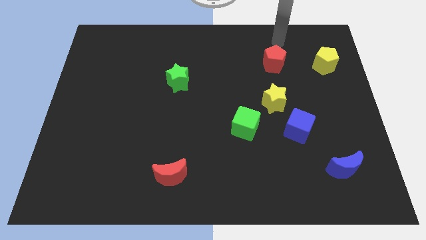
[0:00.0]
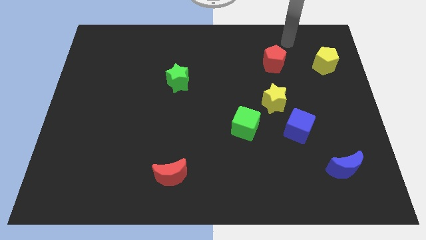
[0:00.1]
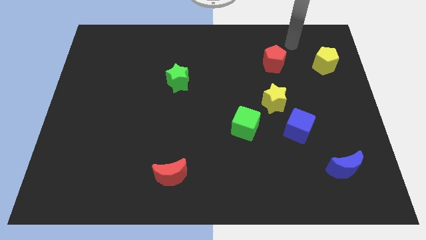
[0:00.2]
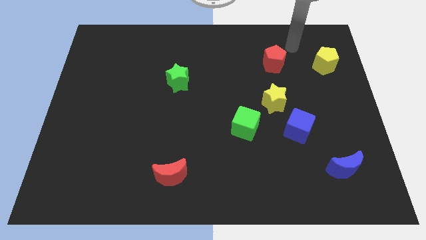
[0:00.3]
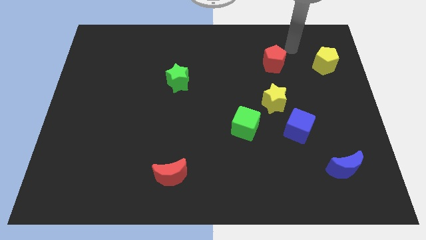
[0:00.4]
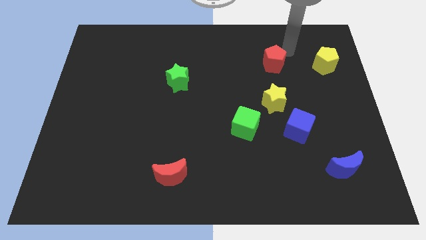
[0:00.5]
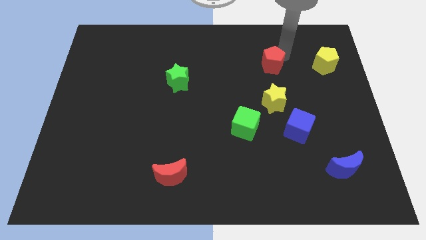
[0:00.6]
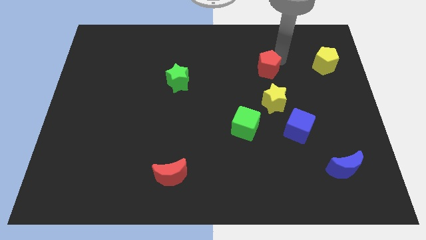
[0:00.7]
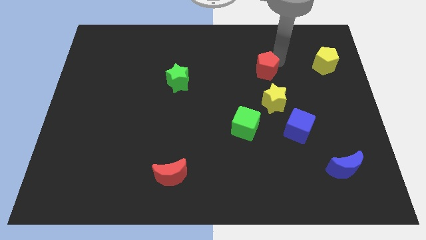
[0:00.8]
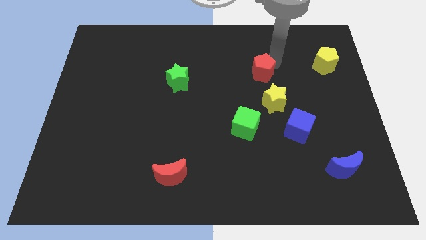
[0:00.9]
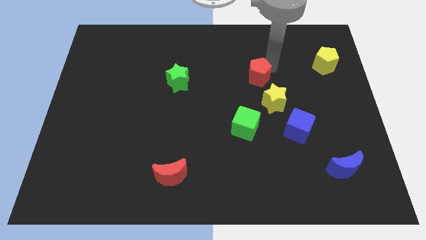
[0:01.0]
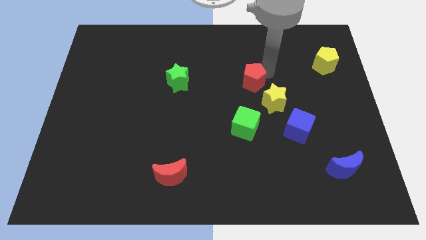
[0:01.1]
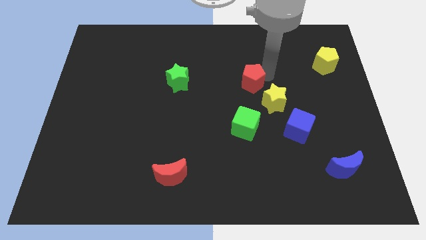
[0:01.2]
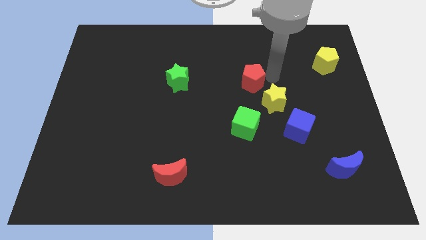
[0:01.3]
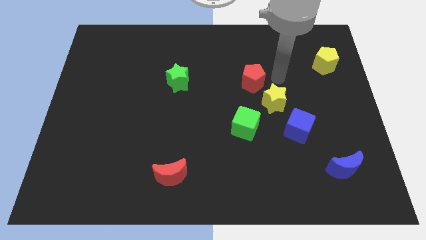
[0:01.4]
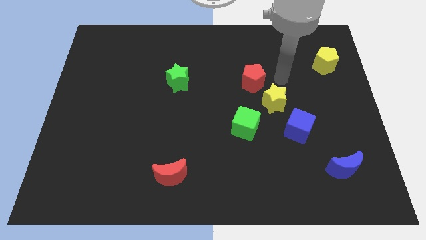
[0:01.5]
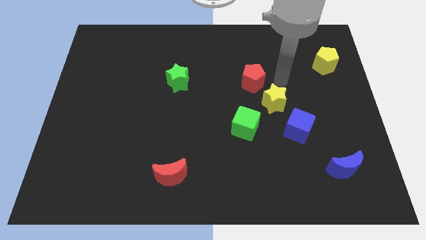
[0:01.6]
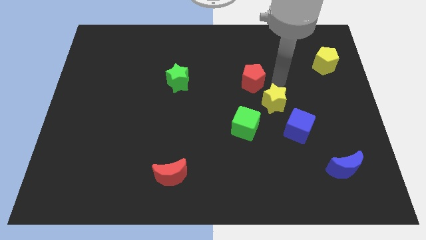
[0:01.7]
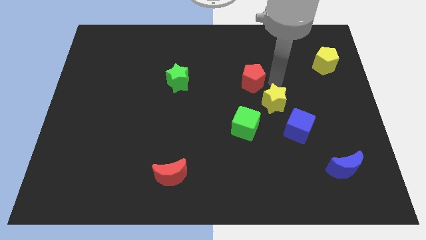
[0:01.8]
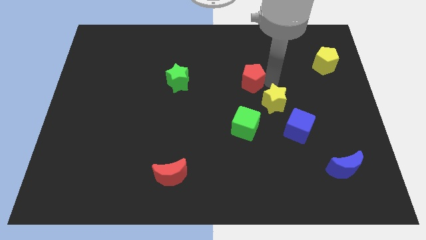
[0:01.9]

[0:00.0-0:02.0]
place the red pentagon to the right side of the green star

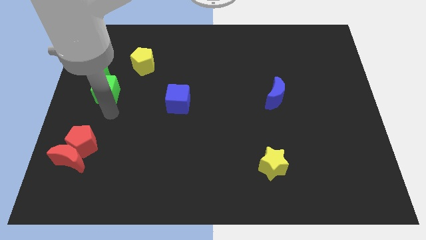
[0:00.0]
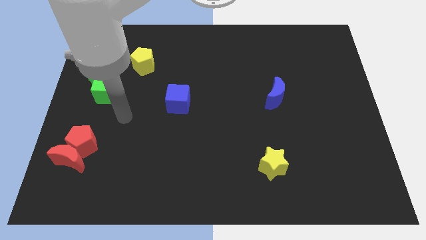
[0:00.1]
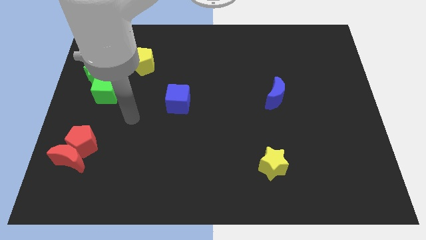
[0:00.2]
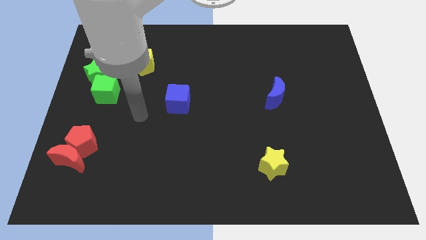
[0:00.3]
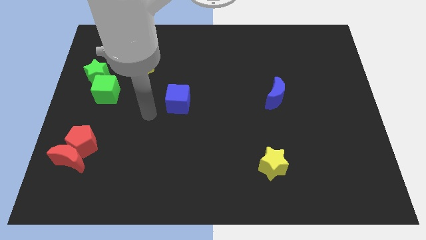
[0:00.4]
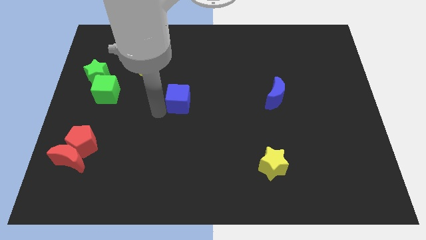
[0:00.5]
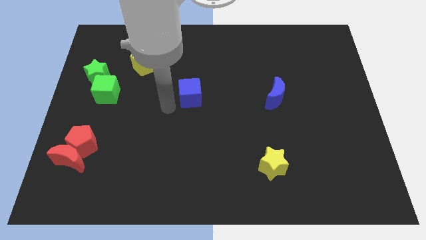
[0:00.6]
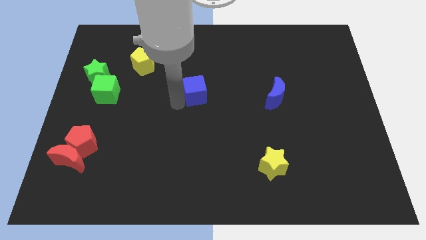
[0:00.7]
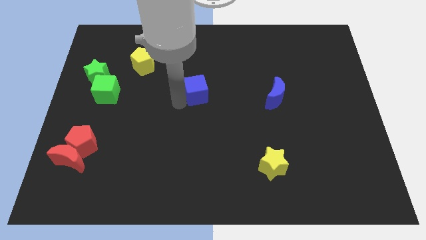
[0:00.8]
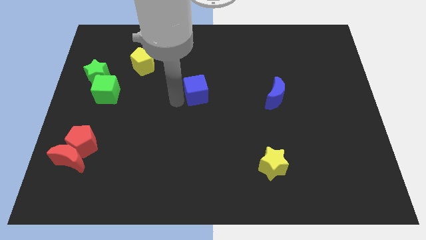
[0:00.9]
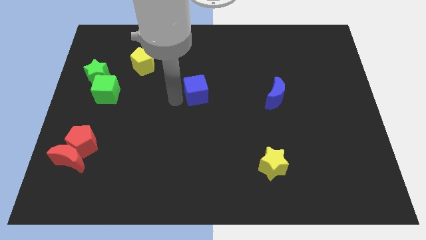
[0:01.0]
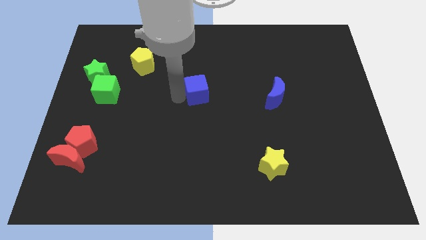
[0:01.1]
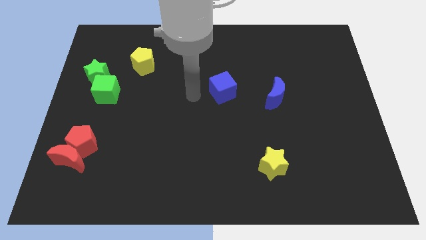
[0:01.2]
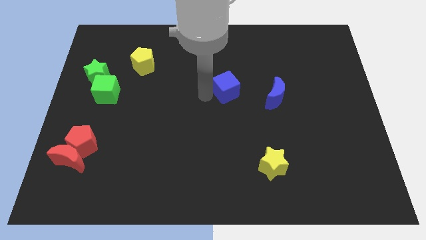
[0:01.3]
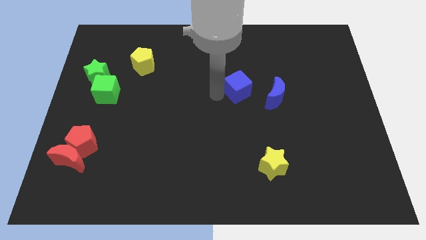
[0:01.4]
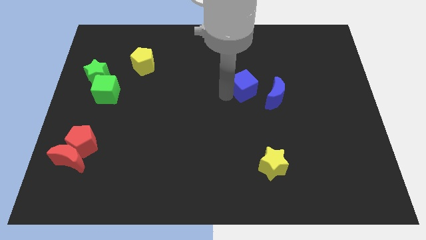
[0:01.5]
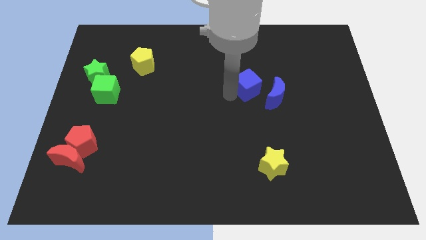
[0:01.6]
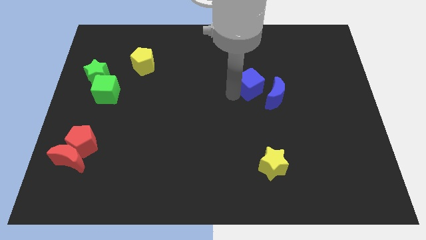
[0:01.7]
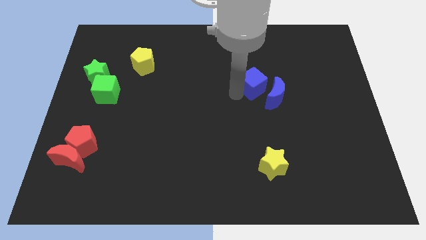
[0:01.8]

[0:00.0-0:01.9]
push the blue cube close to the blue moon

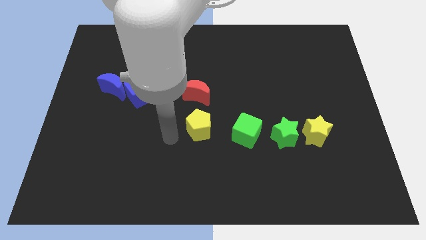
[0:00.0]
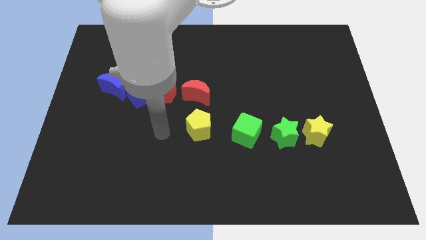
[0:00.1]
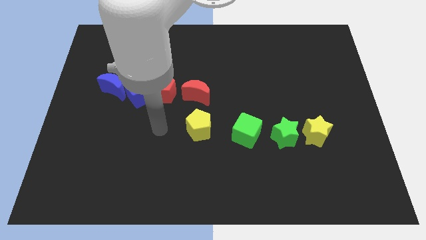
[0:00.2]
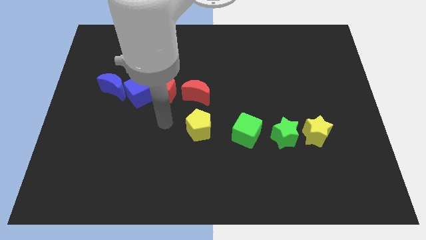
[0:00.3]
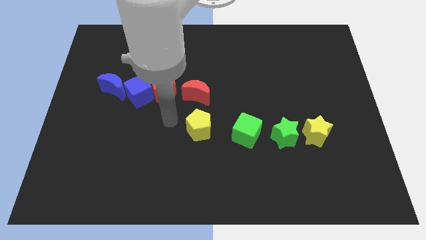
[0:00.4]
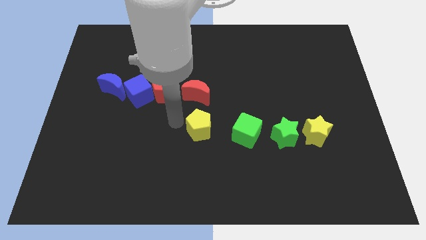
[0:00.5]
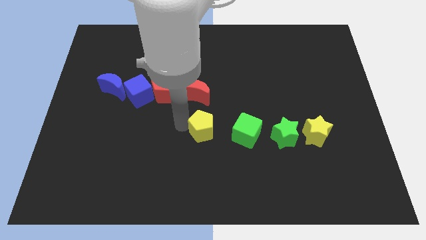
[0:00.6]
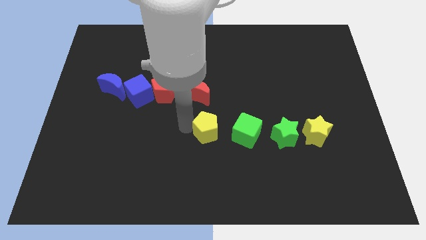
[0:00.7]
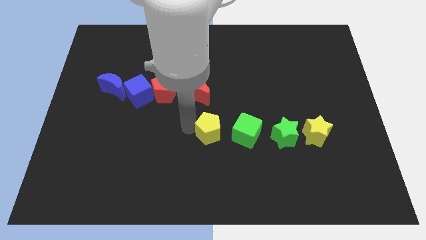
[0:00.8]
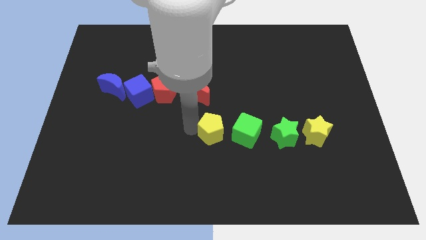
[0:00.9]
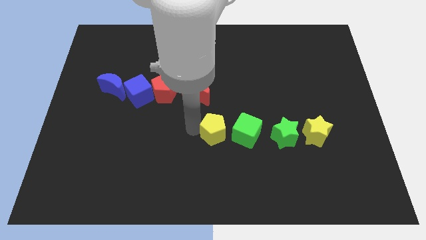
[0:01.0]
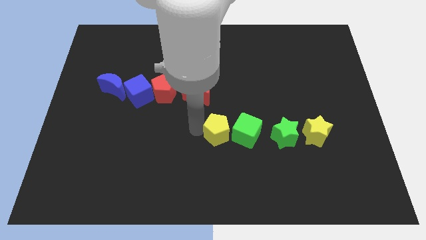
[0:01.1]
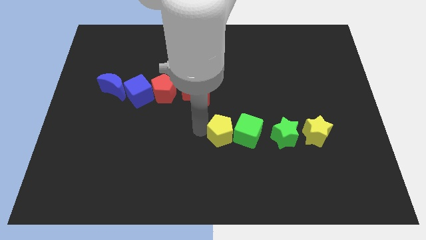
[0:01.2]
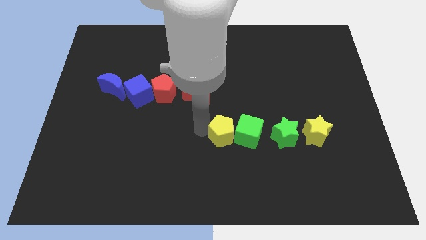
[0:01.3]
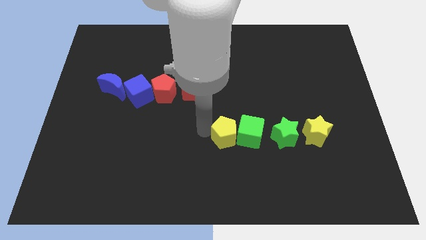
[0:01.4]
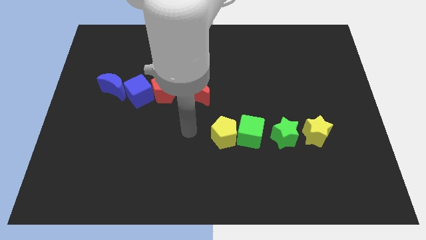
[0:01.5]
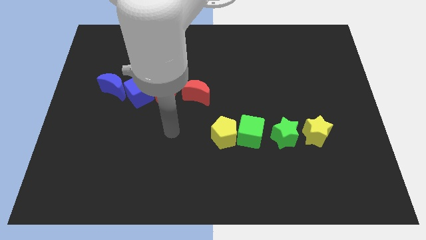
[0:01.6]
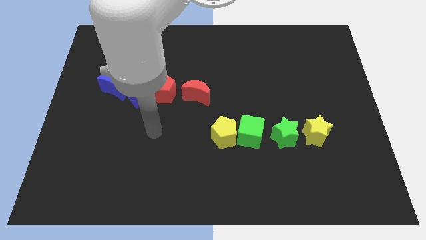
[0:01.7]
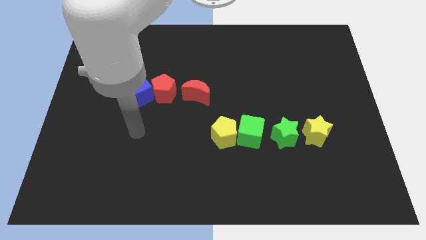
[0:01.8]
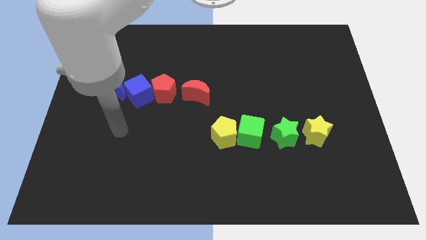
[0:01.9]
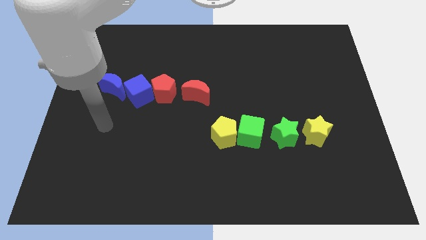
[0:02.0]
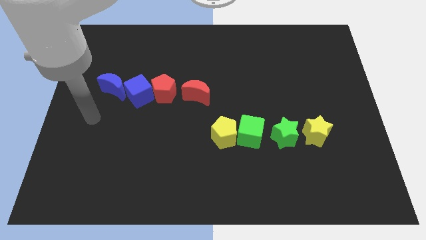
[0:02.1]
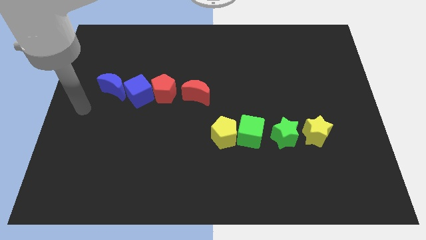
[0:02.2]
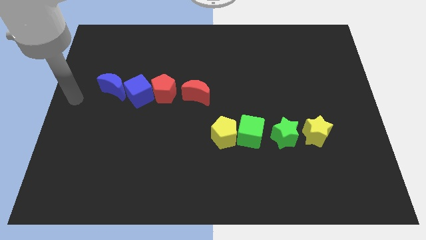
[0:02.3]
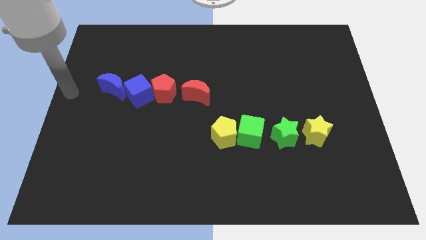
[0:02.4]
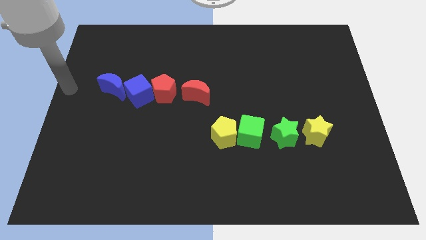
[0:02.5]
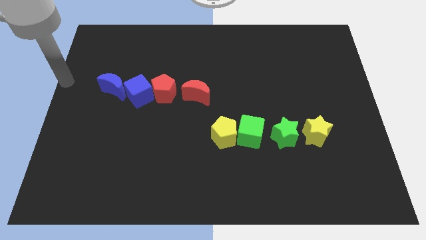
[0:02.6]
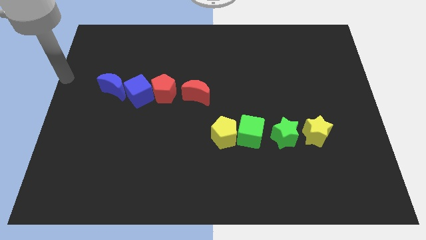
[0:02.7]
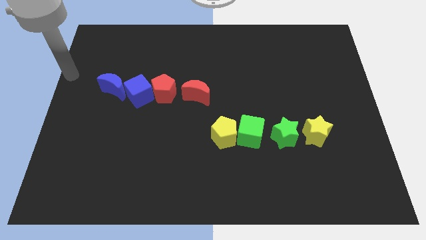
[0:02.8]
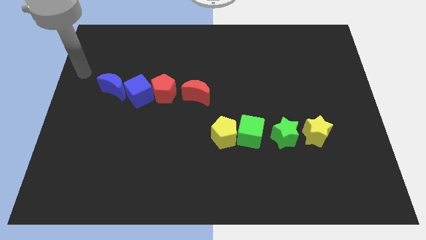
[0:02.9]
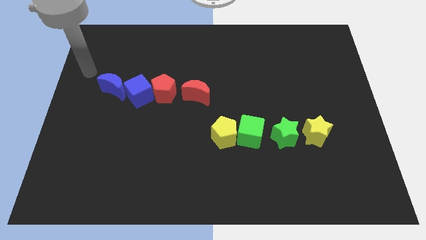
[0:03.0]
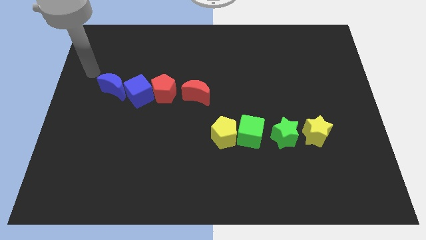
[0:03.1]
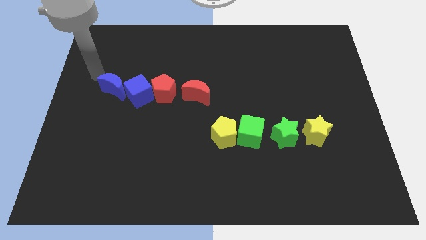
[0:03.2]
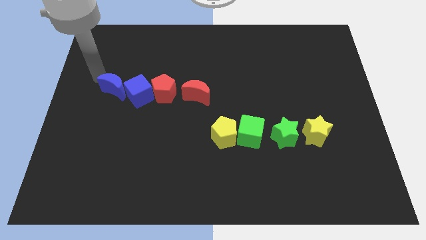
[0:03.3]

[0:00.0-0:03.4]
move the yellow pentagon next to the green cube

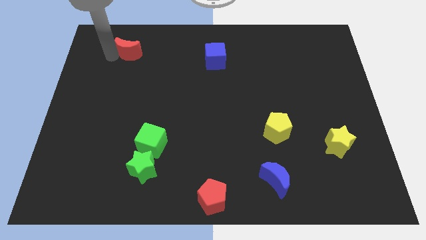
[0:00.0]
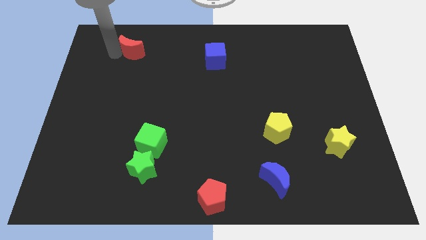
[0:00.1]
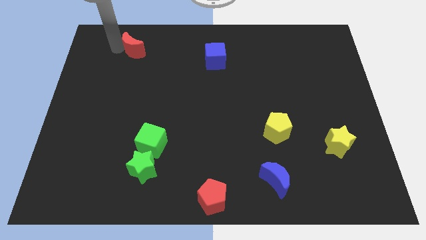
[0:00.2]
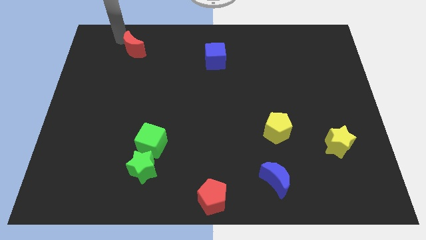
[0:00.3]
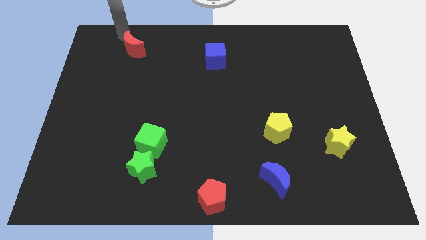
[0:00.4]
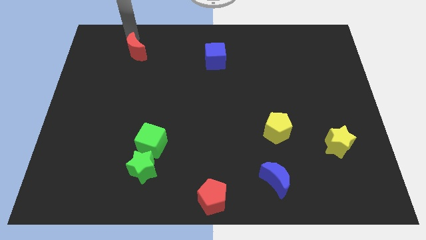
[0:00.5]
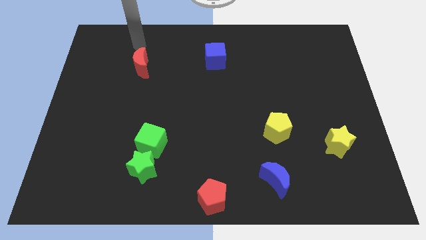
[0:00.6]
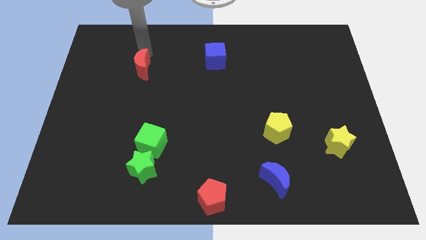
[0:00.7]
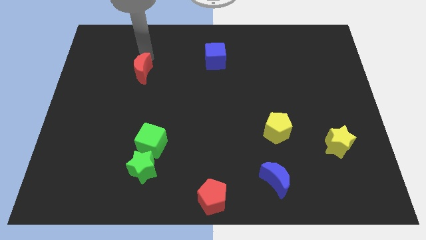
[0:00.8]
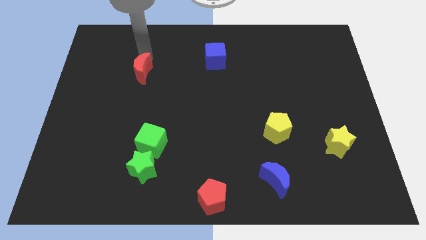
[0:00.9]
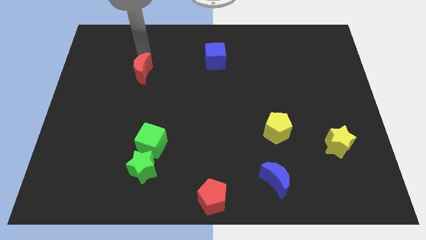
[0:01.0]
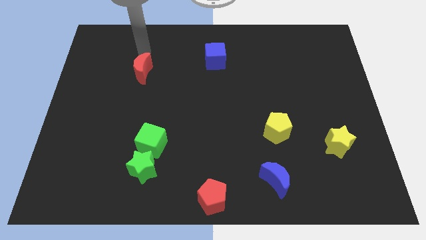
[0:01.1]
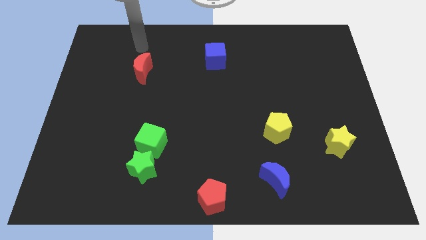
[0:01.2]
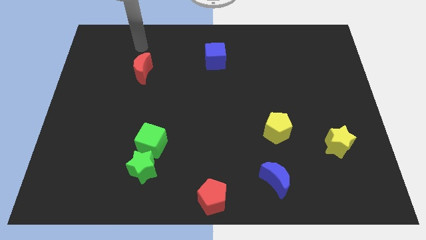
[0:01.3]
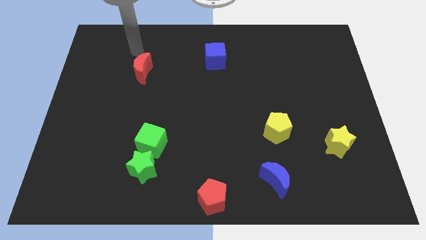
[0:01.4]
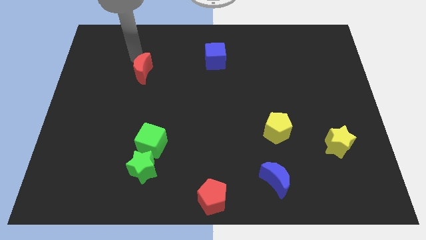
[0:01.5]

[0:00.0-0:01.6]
move red crescent from present place
